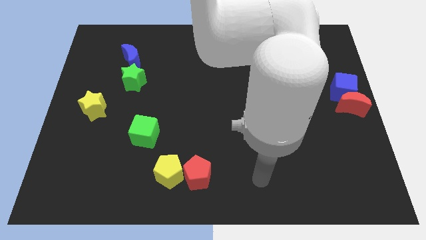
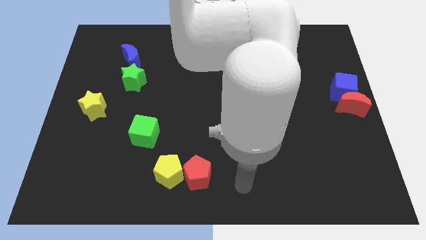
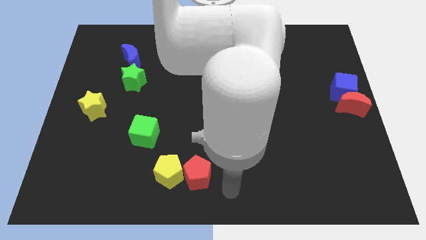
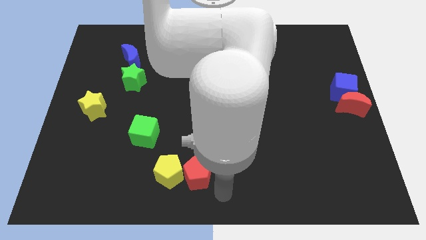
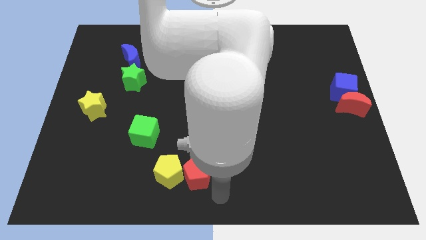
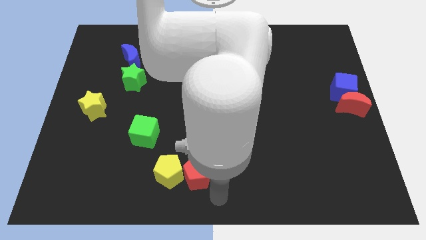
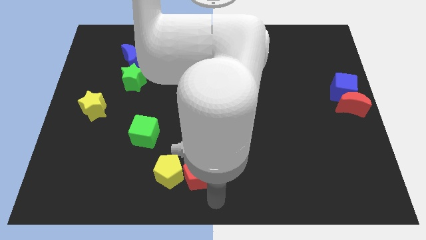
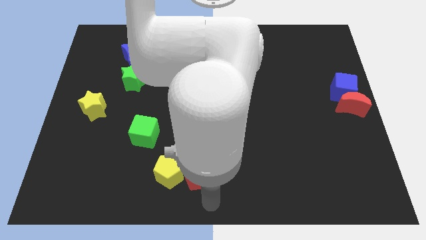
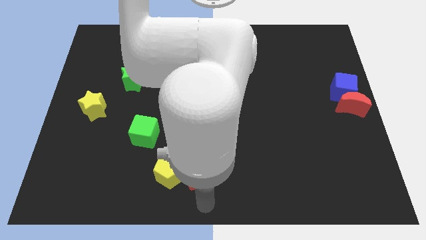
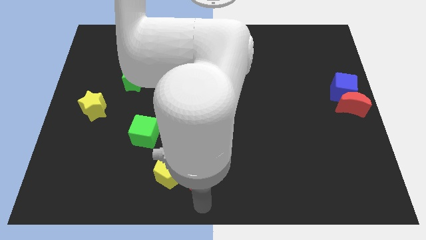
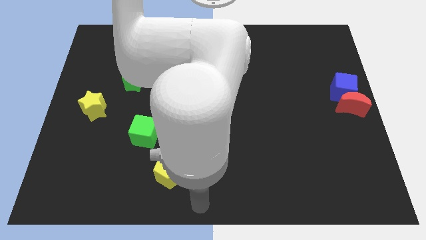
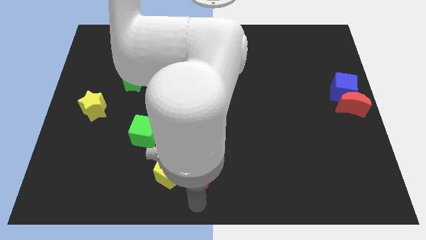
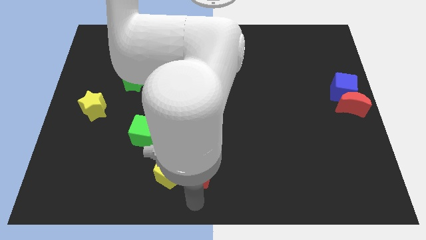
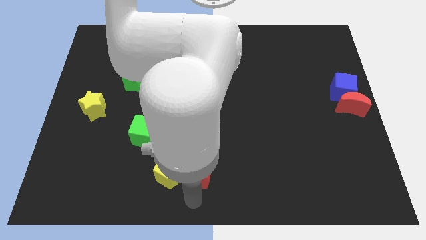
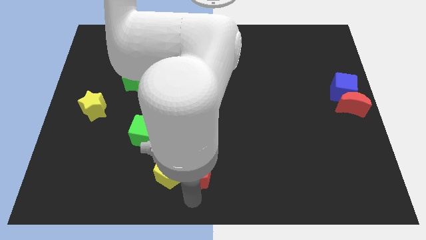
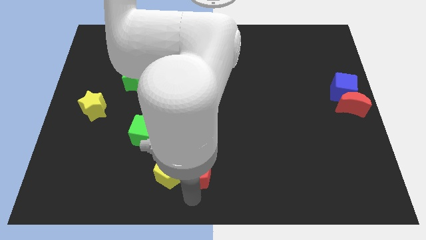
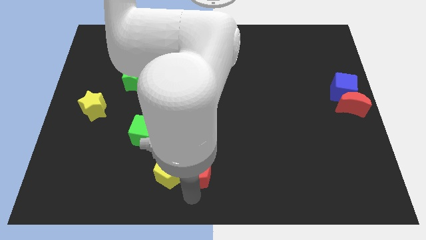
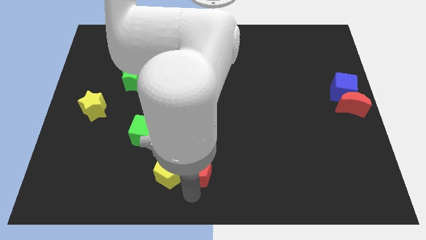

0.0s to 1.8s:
slightly push the red pentagon to the center of the board

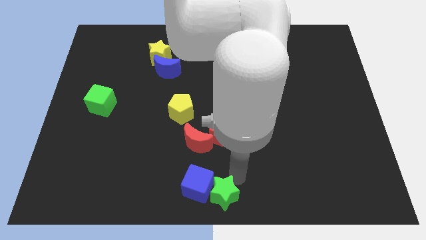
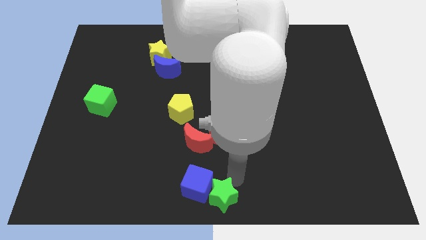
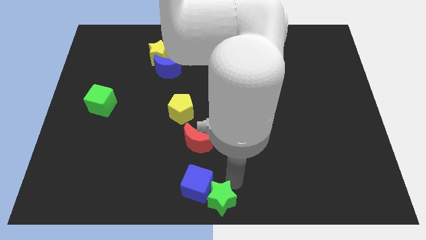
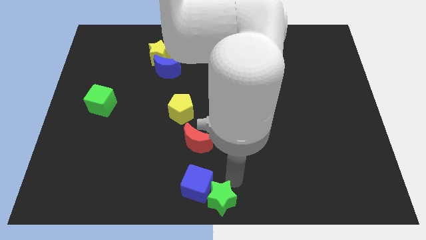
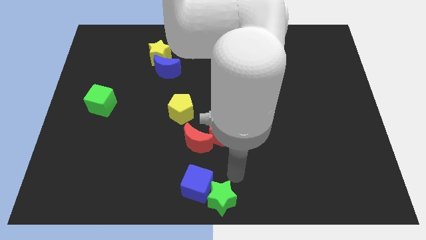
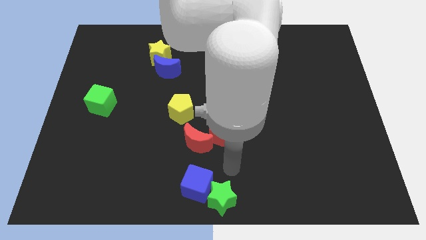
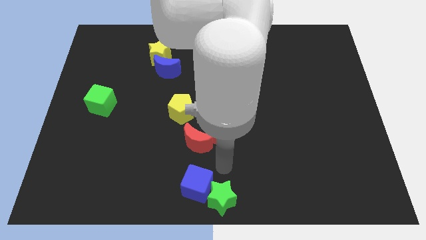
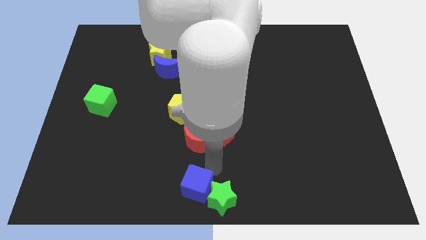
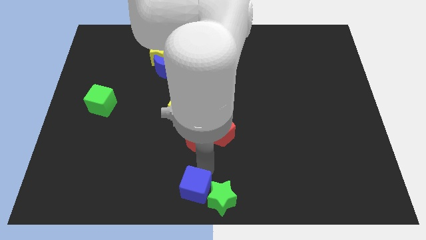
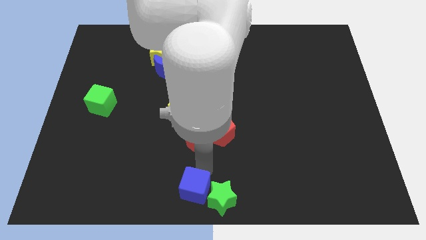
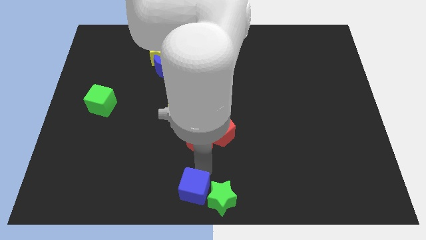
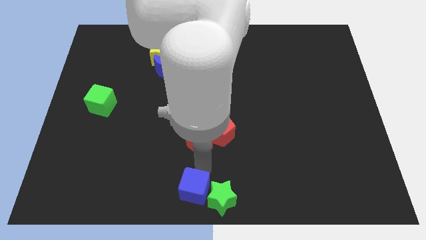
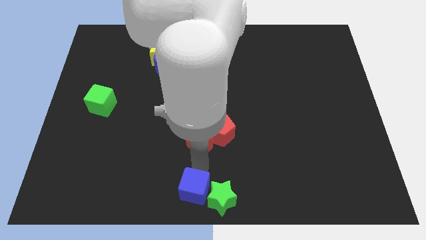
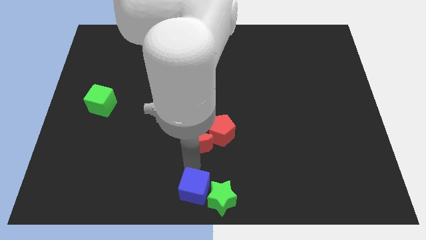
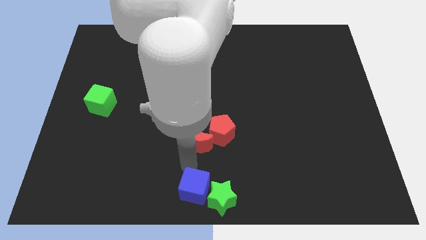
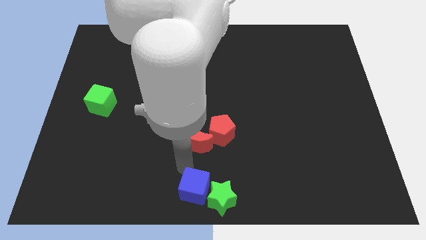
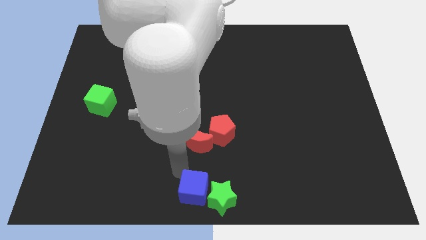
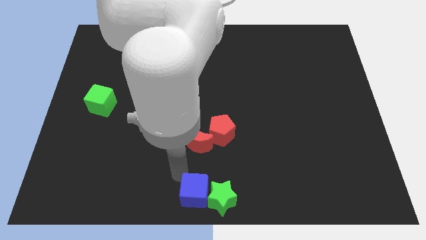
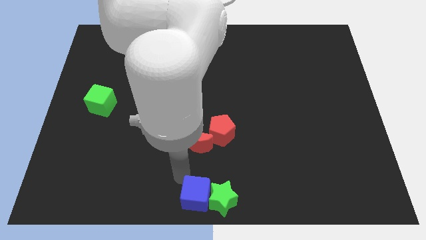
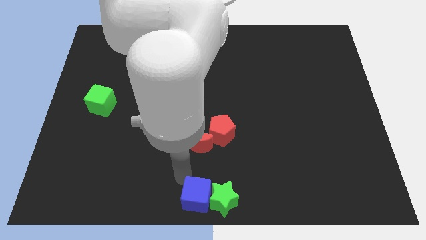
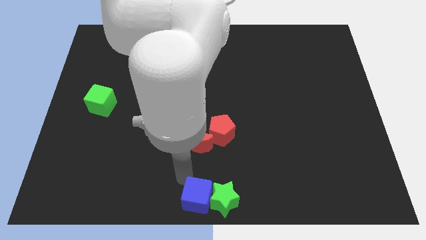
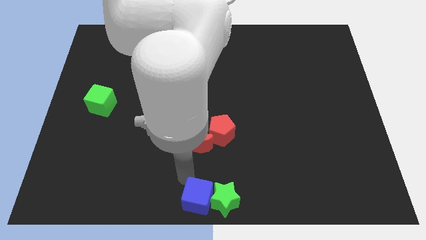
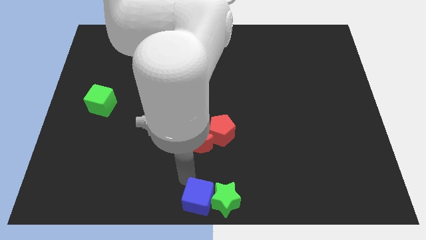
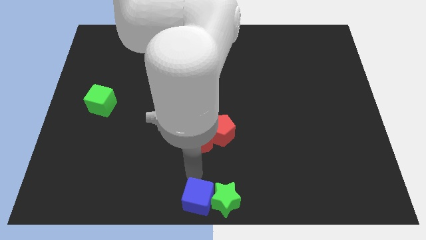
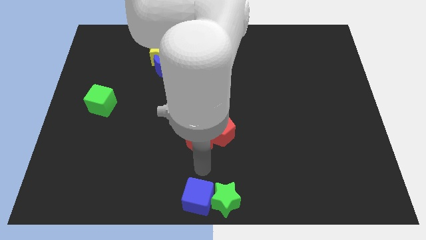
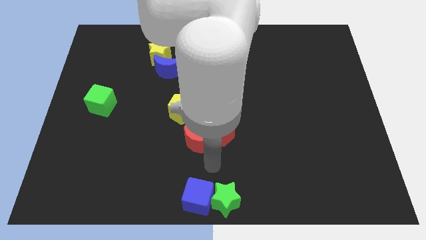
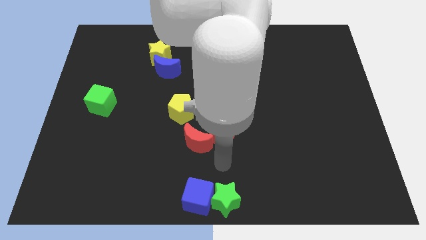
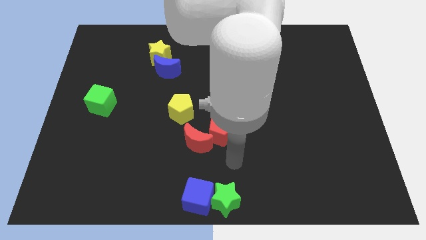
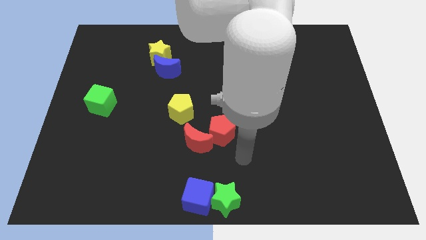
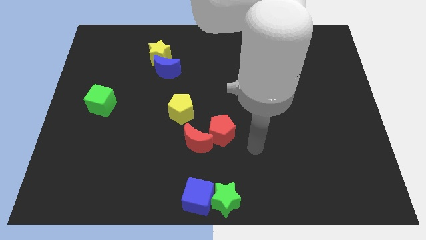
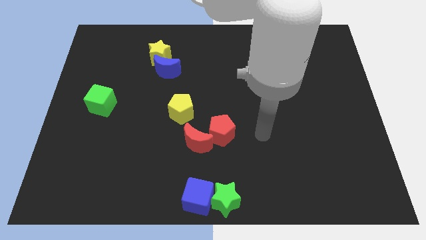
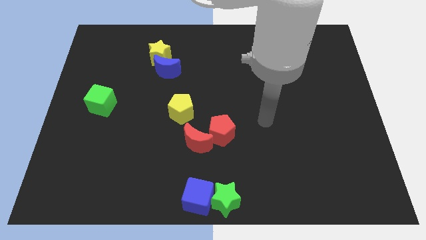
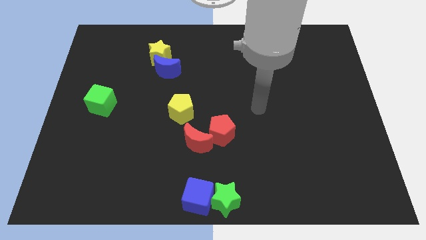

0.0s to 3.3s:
push the blue cube towards the bottom center of the board

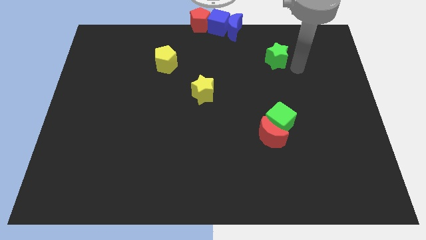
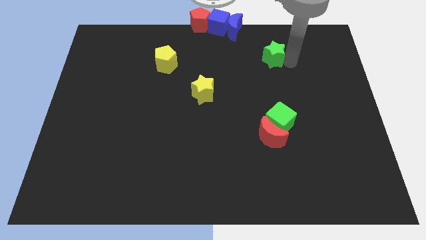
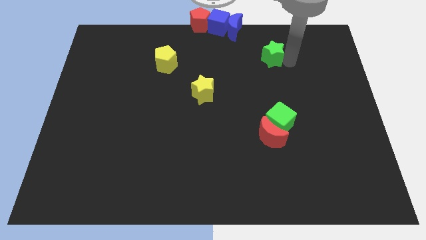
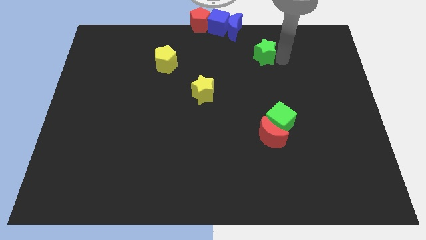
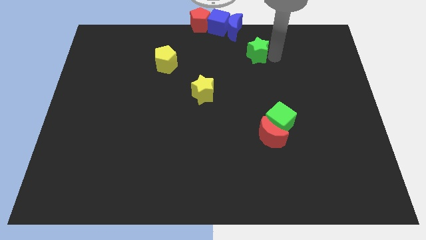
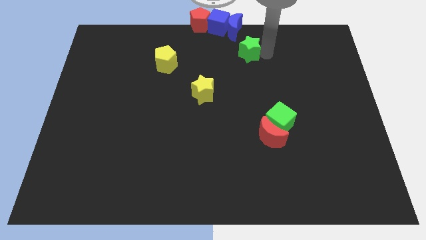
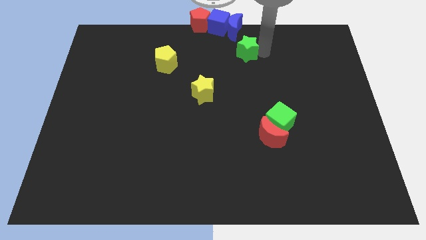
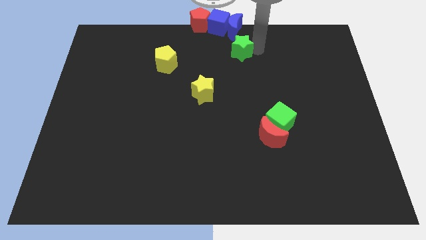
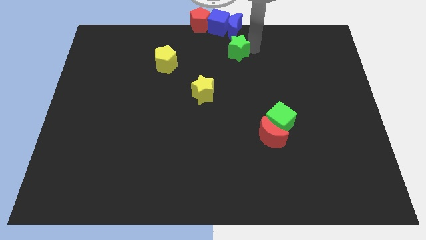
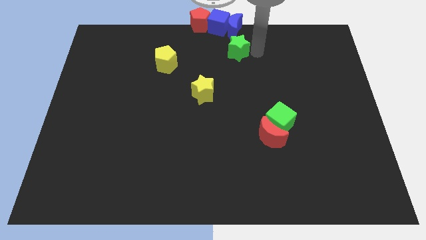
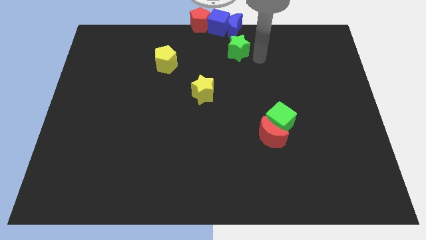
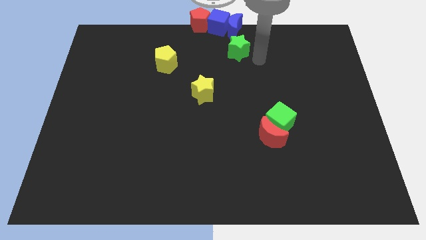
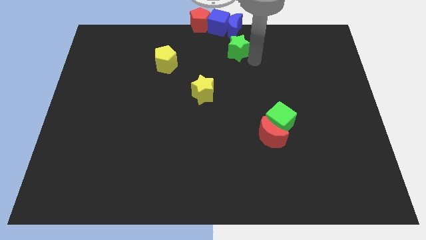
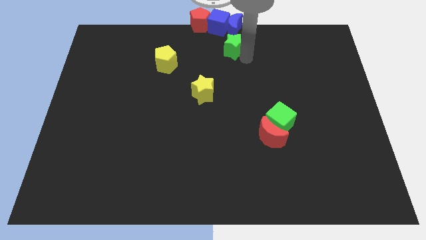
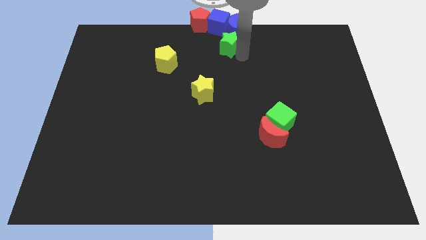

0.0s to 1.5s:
push the green star to the bottom of the blue crescent

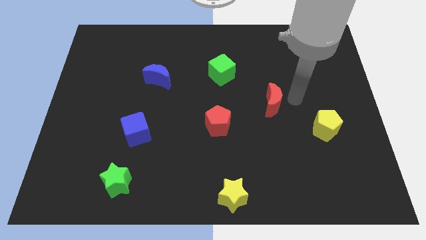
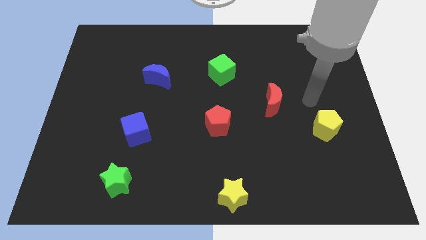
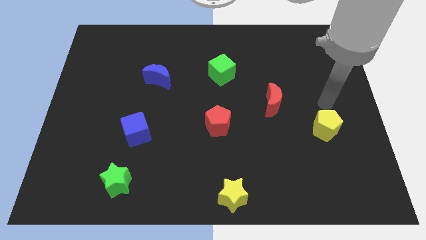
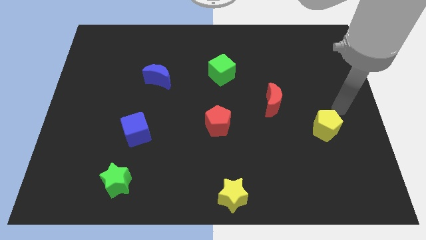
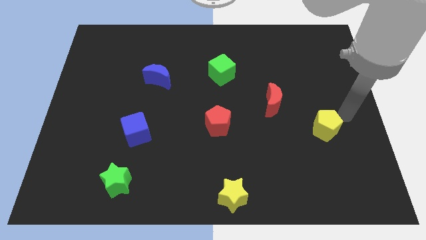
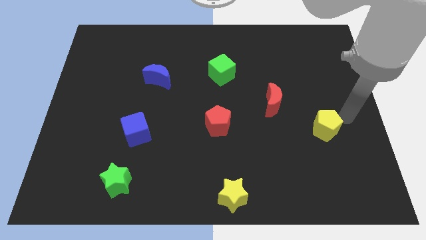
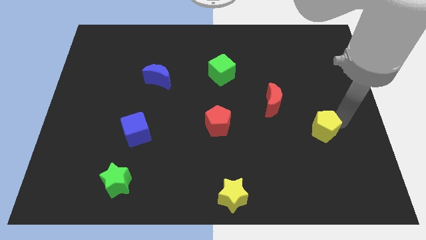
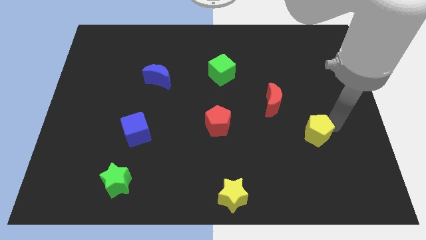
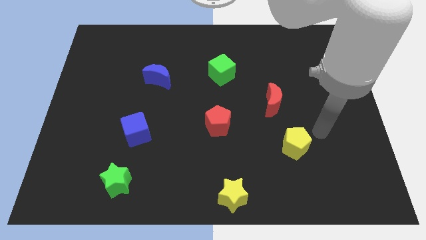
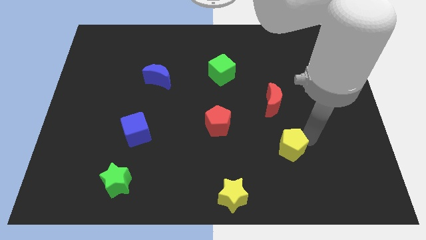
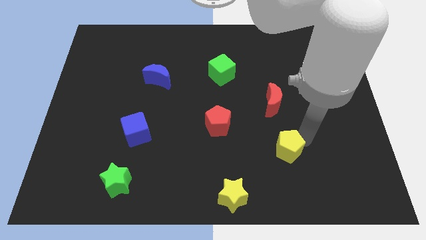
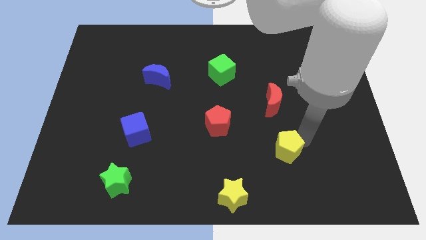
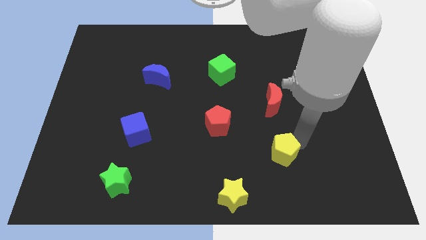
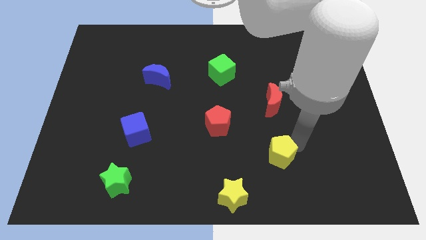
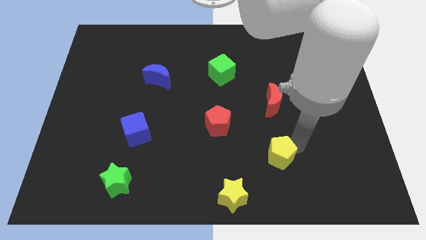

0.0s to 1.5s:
push the yellow pentagon towards the top right side of the yellow star

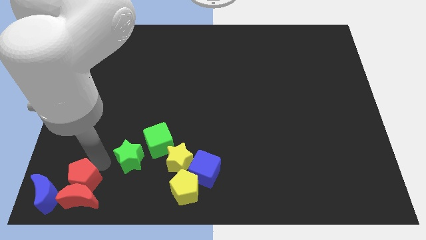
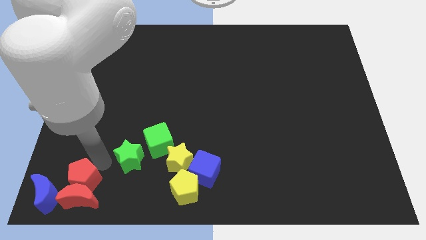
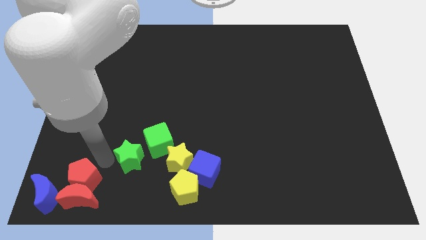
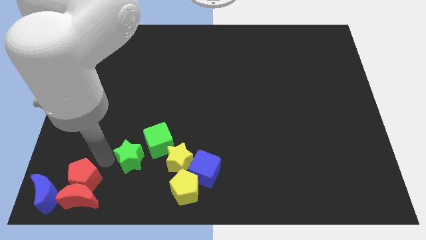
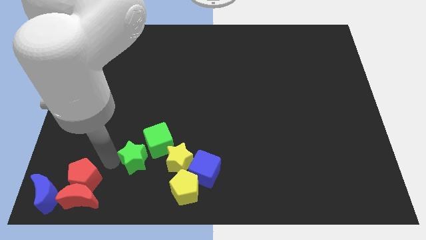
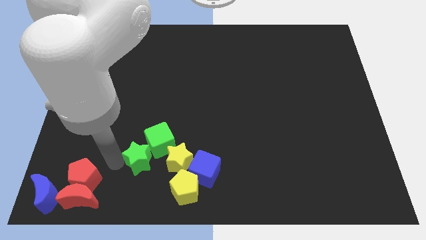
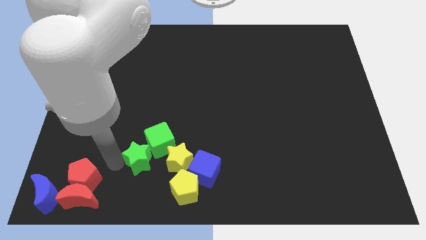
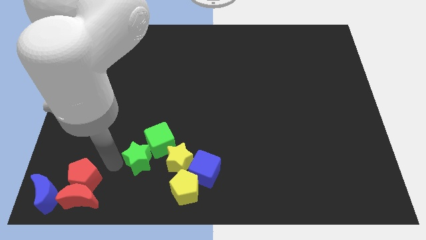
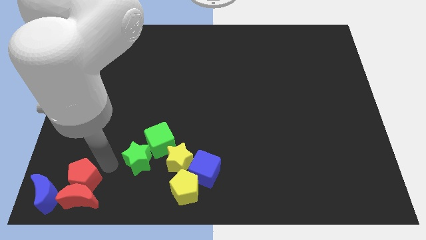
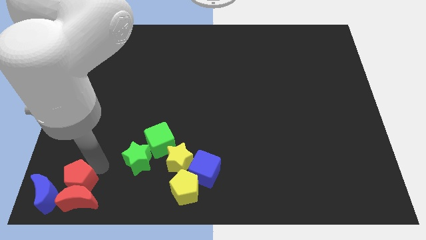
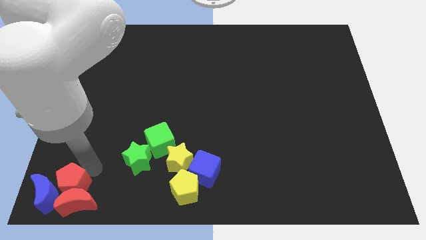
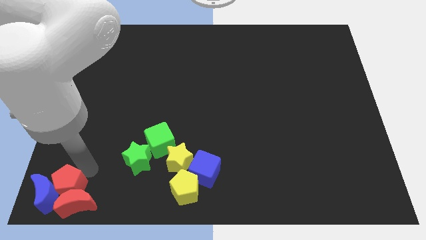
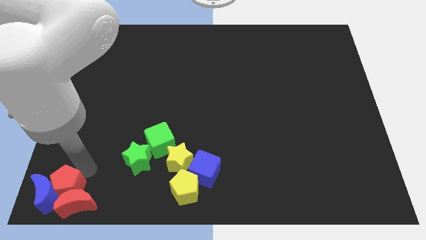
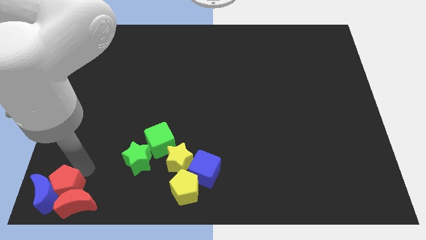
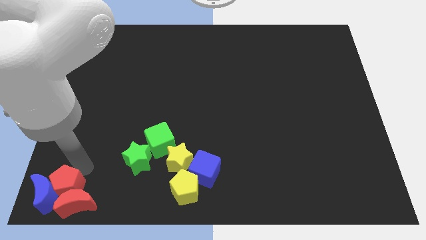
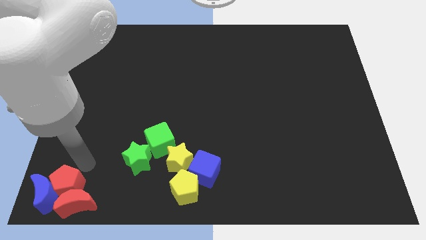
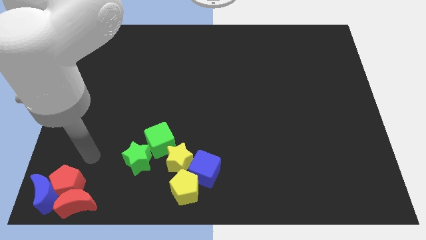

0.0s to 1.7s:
place the red pentagon into the blue crescent
